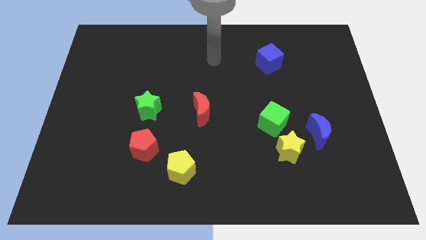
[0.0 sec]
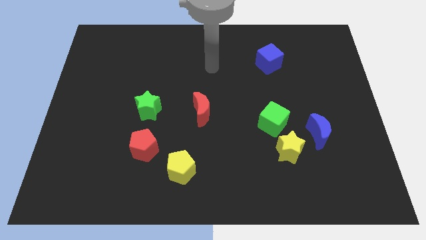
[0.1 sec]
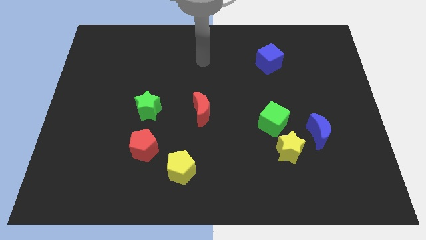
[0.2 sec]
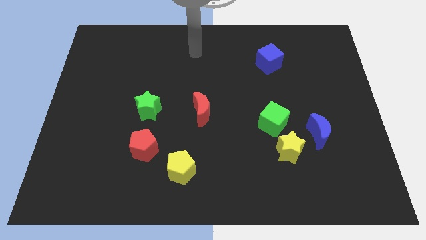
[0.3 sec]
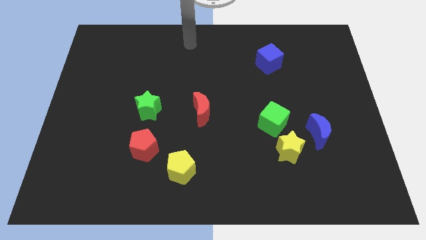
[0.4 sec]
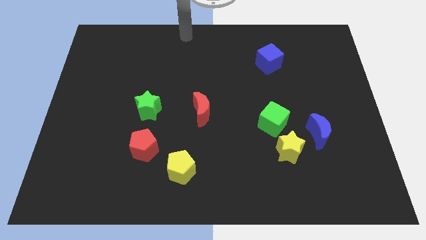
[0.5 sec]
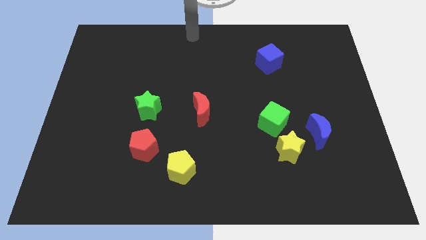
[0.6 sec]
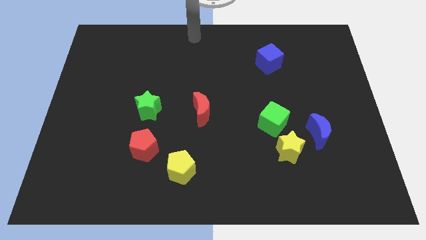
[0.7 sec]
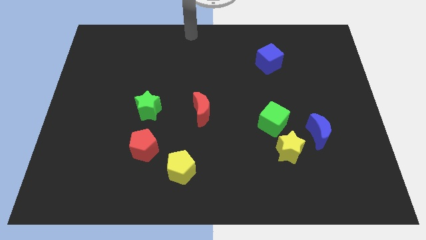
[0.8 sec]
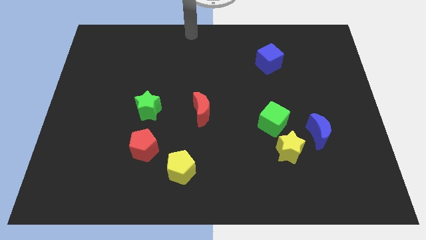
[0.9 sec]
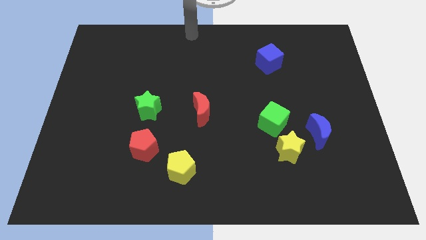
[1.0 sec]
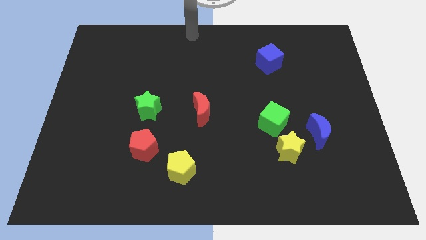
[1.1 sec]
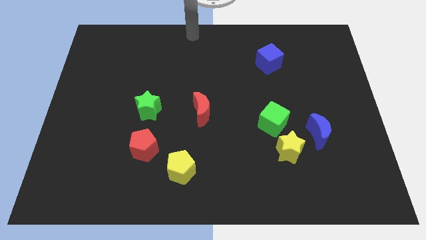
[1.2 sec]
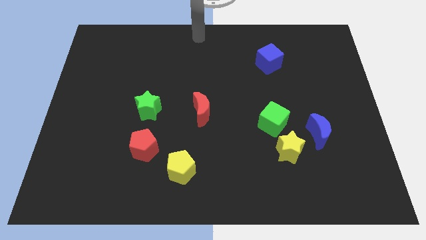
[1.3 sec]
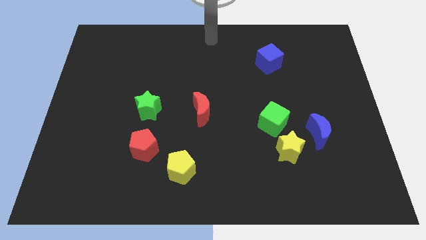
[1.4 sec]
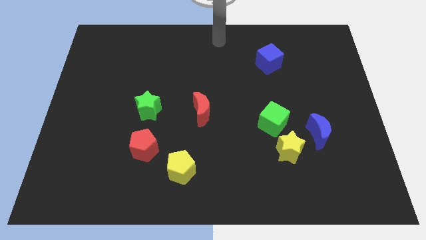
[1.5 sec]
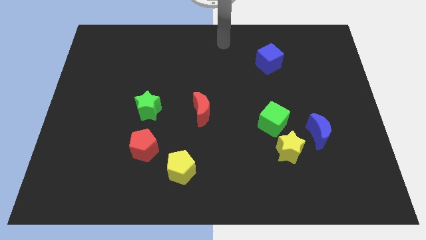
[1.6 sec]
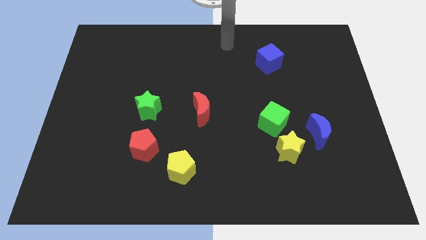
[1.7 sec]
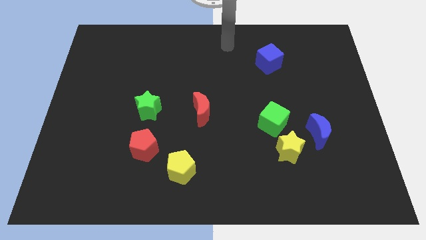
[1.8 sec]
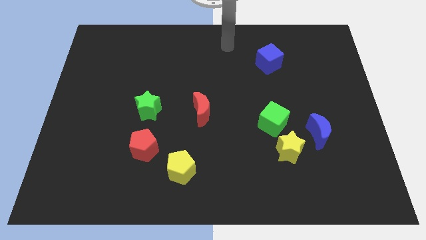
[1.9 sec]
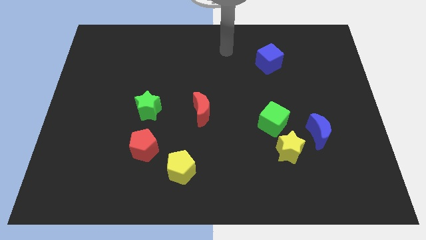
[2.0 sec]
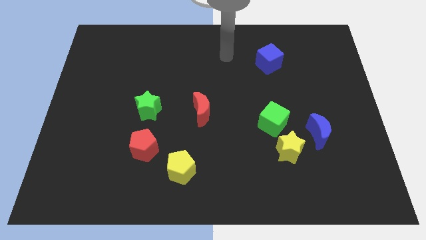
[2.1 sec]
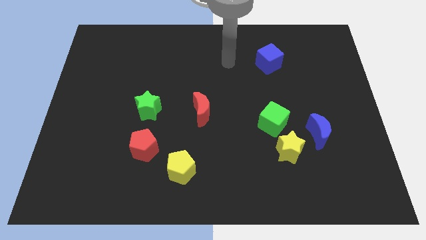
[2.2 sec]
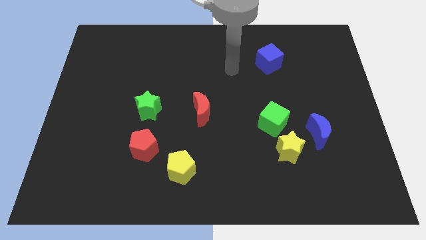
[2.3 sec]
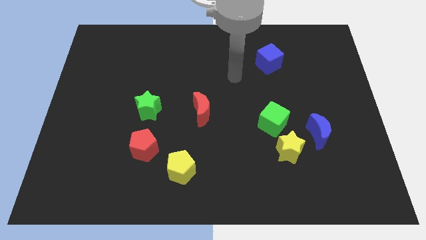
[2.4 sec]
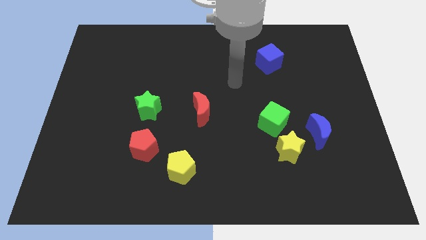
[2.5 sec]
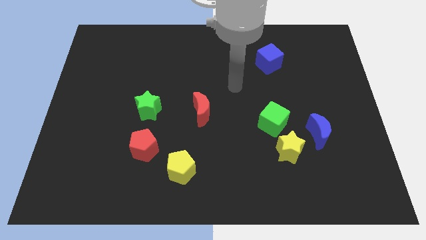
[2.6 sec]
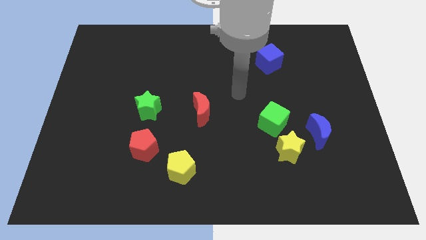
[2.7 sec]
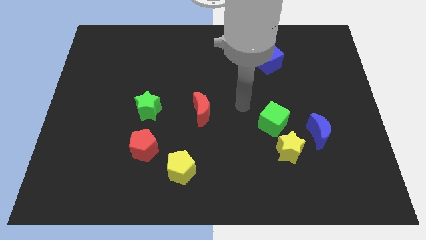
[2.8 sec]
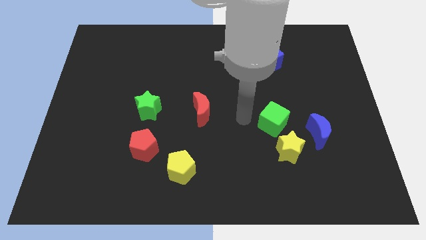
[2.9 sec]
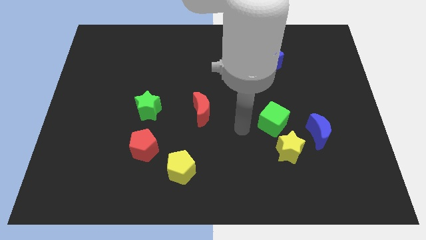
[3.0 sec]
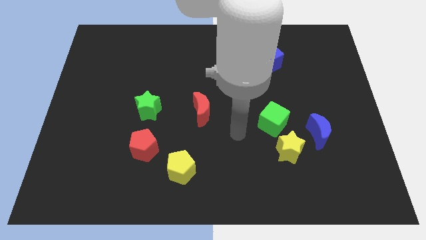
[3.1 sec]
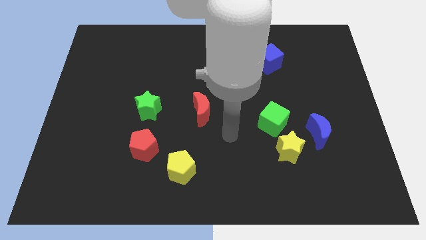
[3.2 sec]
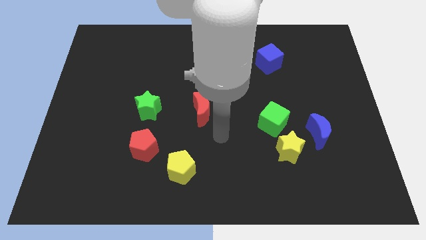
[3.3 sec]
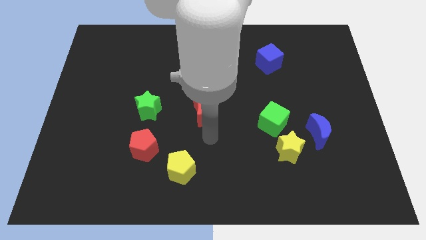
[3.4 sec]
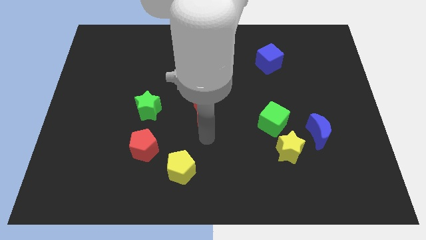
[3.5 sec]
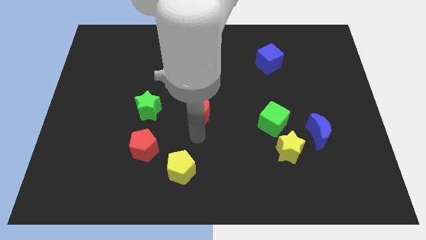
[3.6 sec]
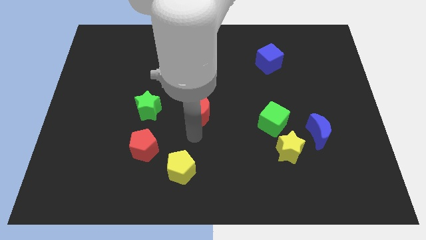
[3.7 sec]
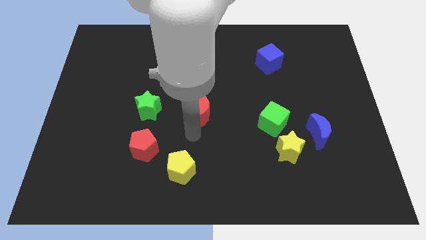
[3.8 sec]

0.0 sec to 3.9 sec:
place your hand vertically below the red moon

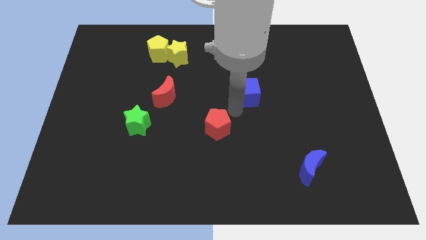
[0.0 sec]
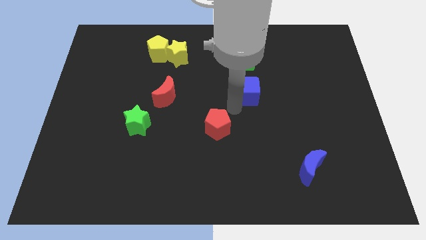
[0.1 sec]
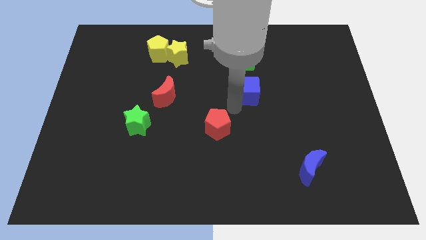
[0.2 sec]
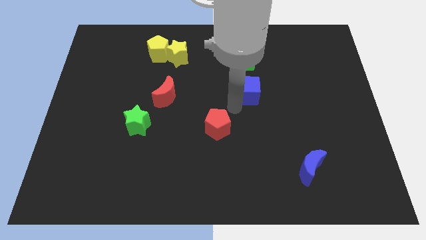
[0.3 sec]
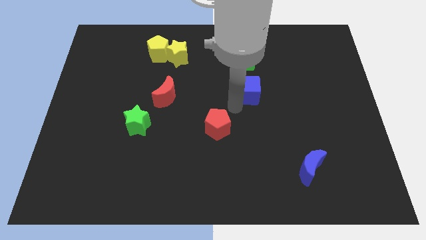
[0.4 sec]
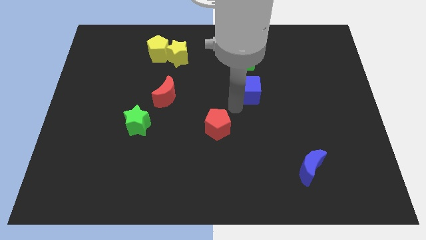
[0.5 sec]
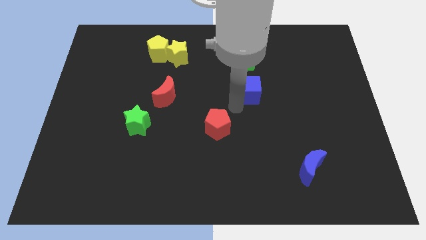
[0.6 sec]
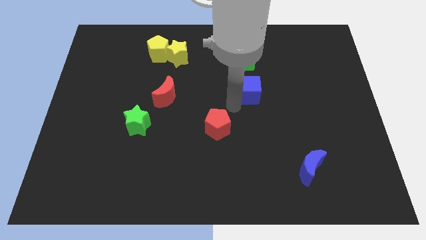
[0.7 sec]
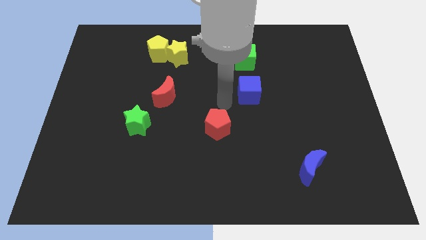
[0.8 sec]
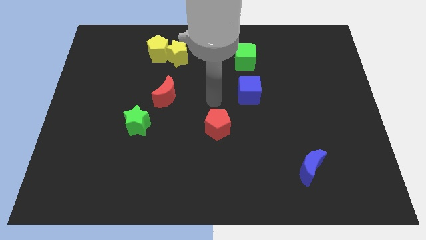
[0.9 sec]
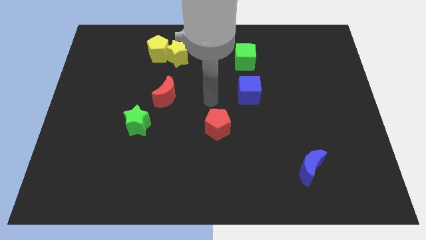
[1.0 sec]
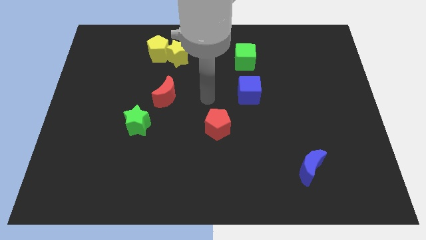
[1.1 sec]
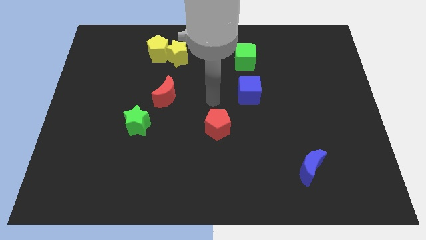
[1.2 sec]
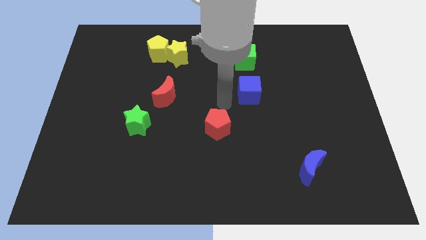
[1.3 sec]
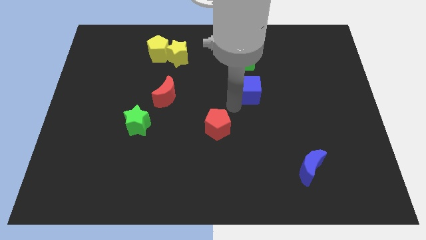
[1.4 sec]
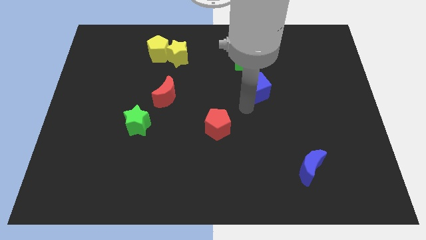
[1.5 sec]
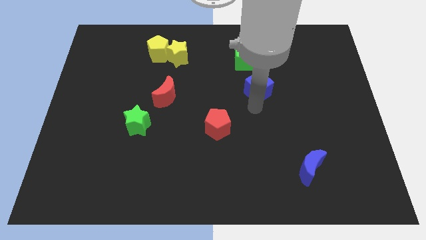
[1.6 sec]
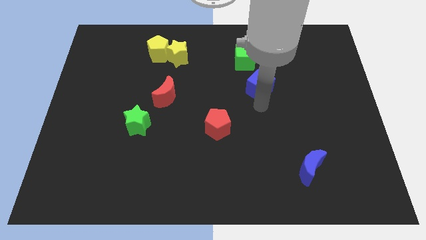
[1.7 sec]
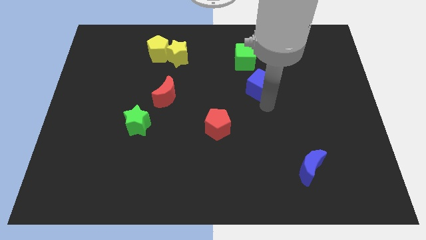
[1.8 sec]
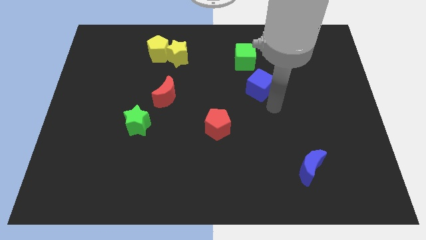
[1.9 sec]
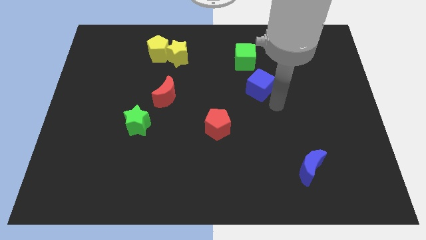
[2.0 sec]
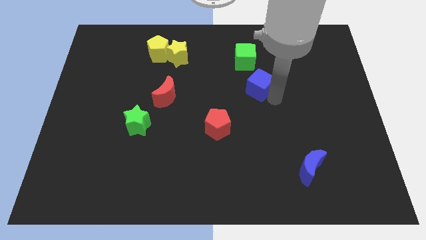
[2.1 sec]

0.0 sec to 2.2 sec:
slightly move blue cube towards green cube

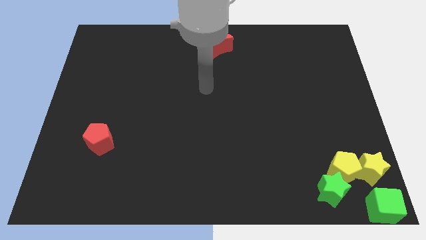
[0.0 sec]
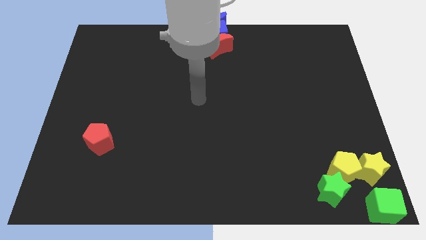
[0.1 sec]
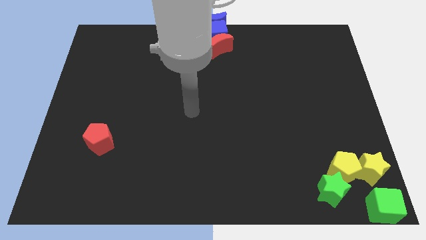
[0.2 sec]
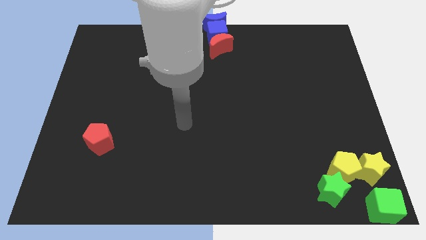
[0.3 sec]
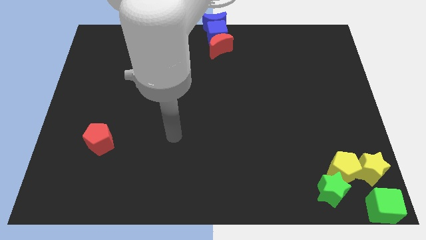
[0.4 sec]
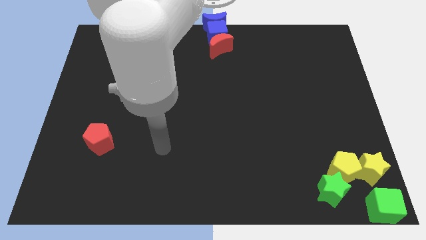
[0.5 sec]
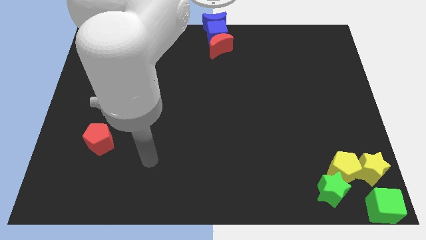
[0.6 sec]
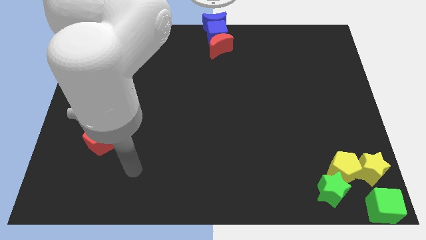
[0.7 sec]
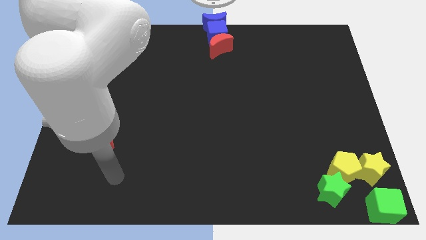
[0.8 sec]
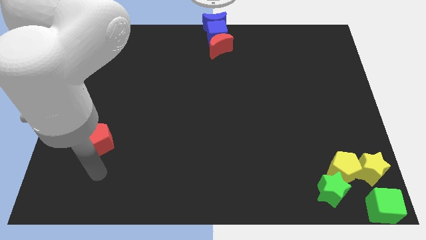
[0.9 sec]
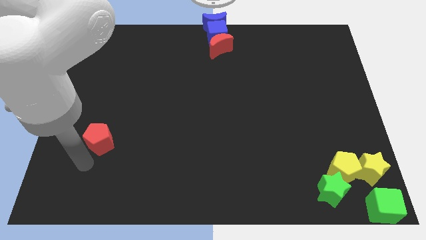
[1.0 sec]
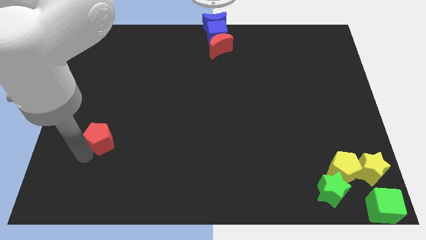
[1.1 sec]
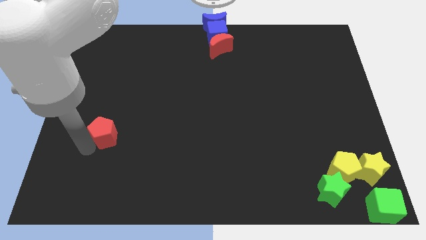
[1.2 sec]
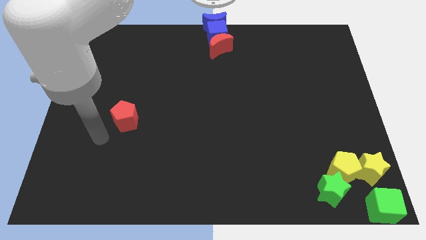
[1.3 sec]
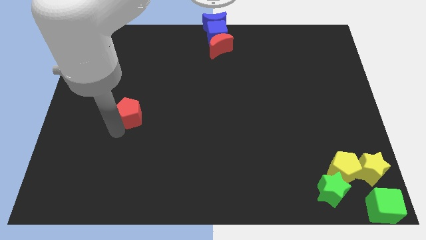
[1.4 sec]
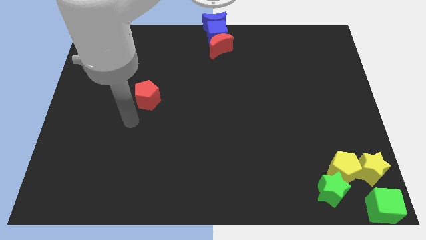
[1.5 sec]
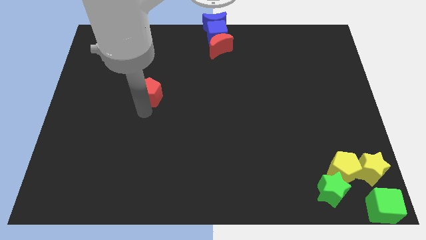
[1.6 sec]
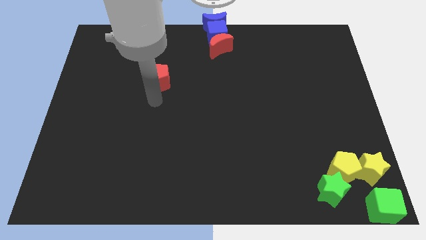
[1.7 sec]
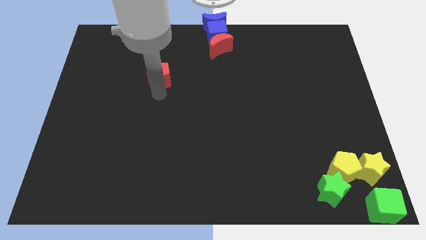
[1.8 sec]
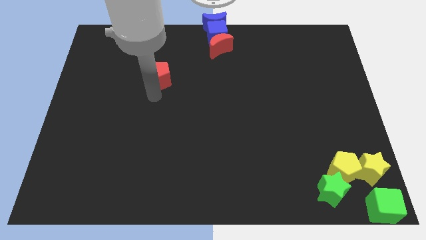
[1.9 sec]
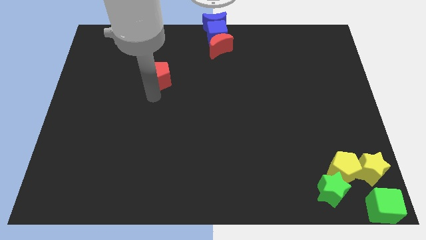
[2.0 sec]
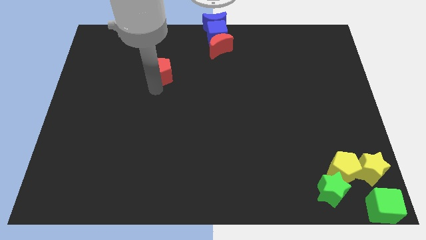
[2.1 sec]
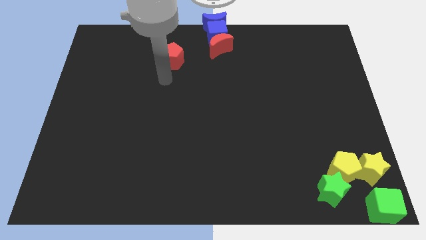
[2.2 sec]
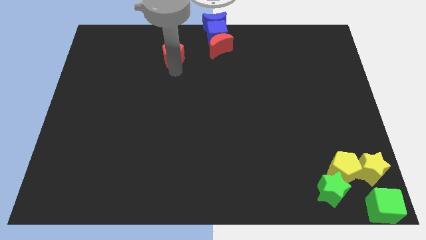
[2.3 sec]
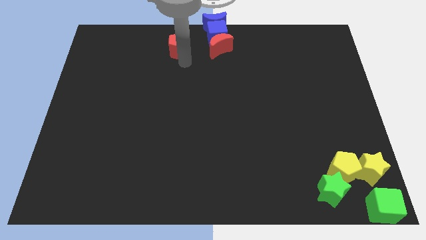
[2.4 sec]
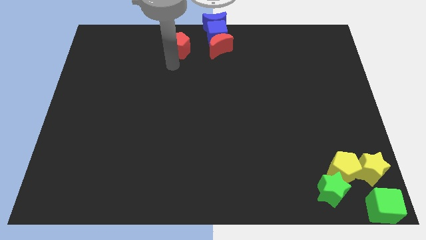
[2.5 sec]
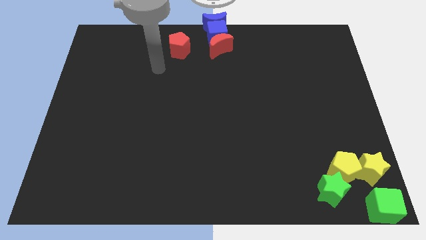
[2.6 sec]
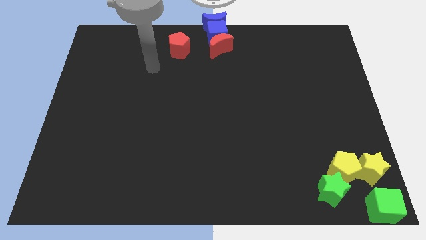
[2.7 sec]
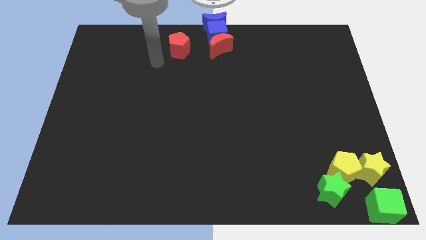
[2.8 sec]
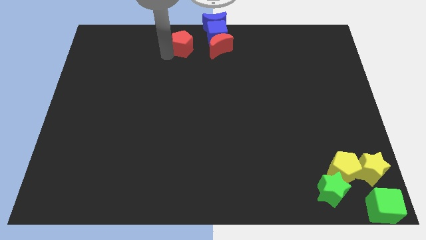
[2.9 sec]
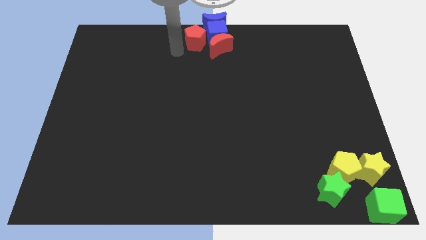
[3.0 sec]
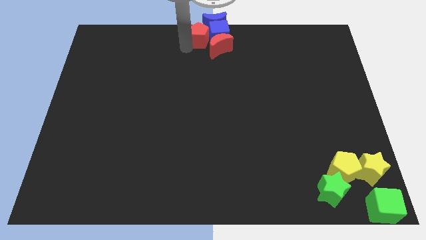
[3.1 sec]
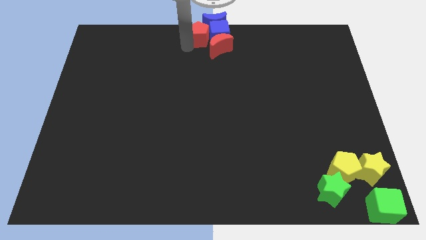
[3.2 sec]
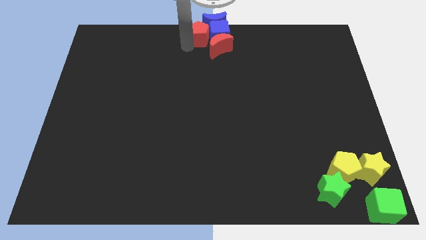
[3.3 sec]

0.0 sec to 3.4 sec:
place red pentagon left to blue cube
